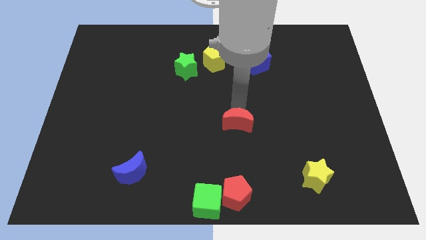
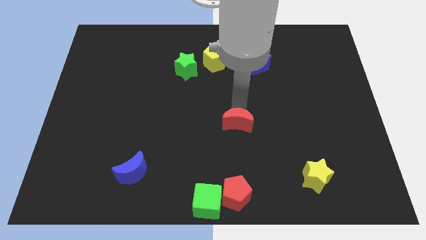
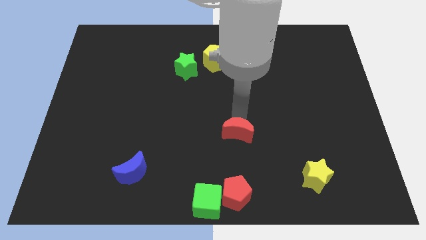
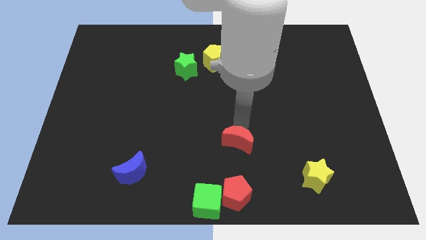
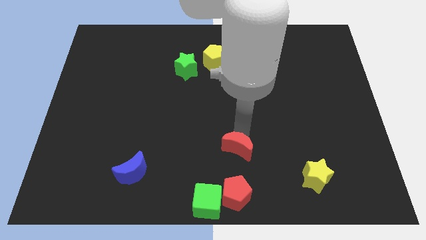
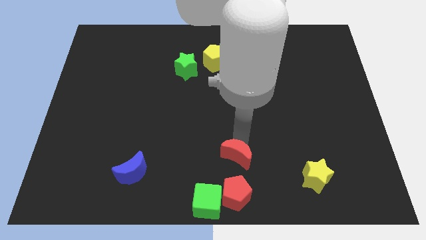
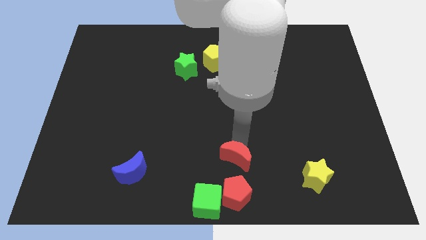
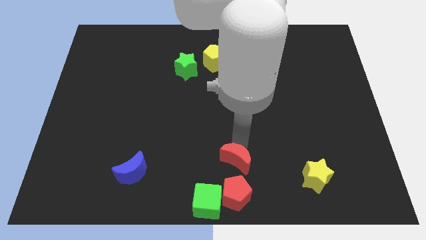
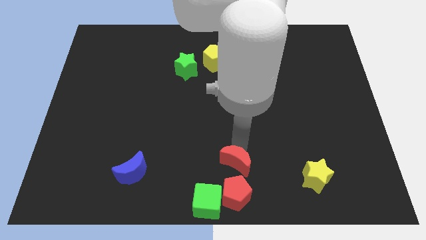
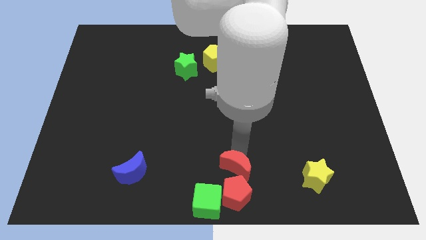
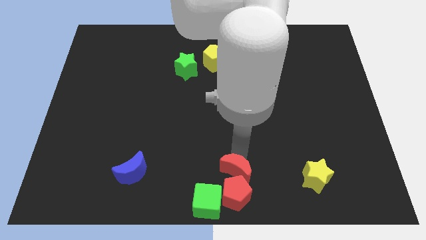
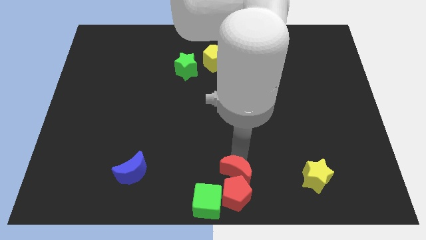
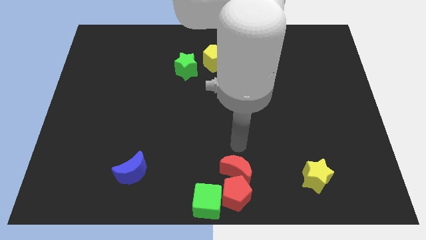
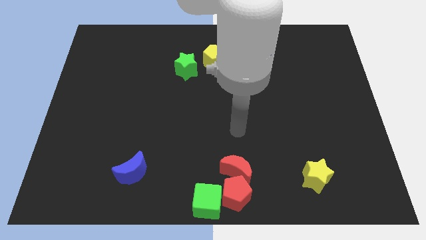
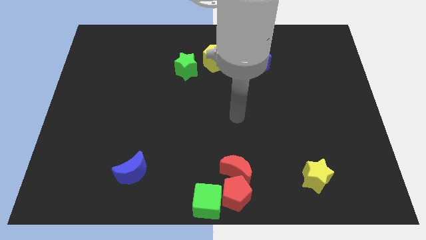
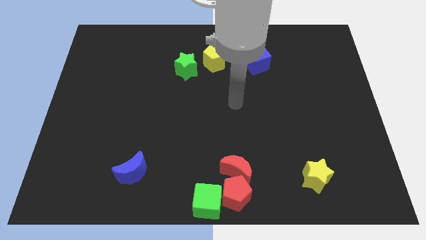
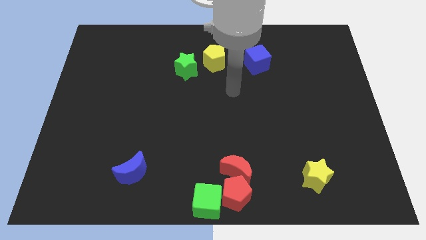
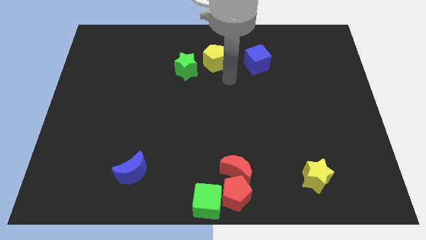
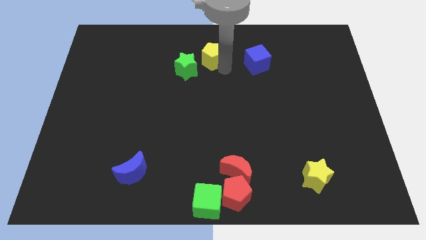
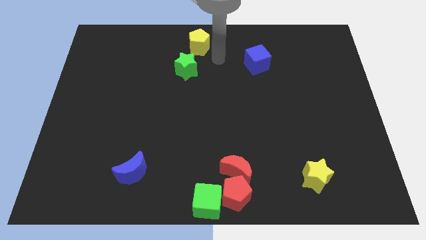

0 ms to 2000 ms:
move red moon into red pentagon

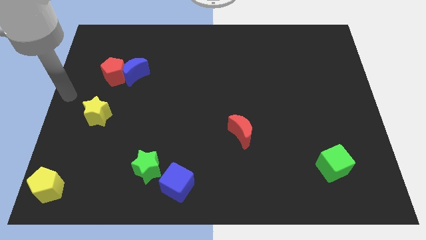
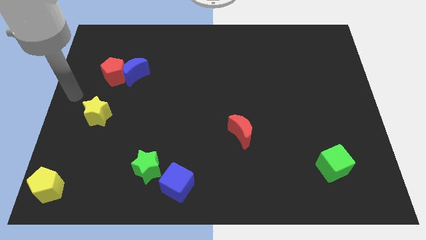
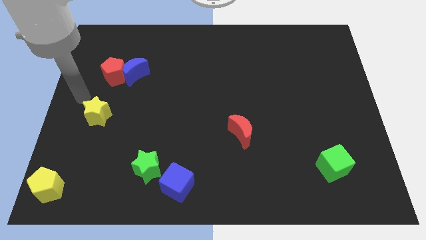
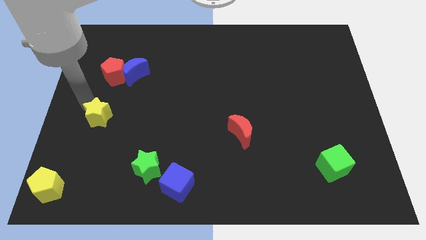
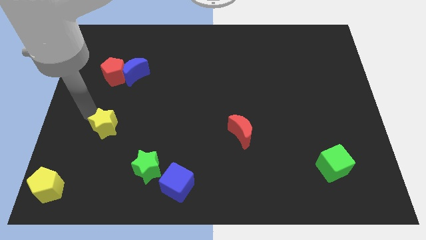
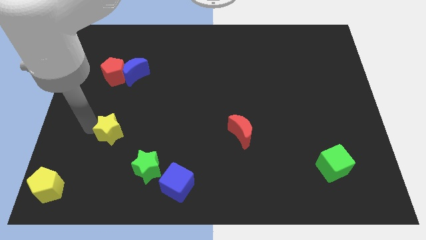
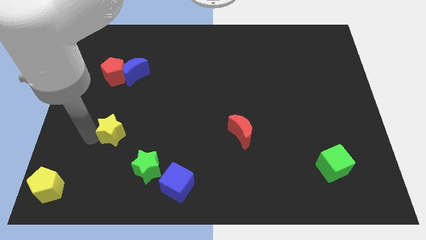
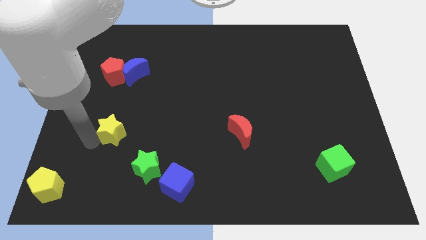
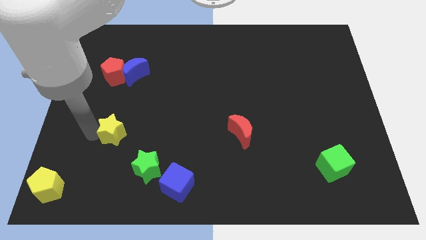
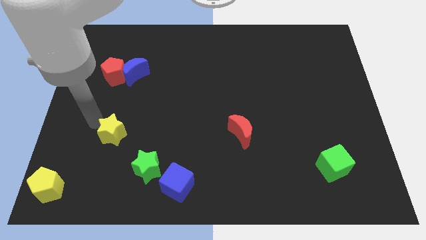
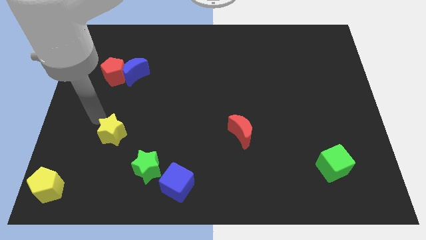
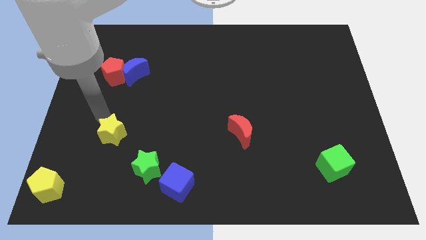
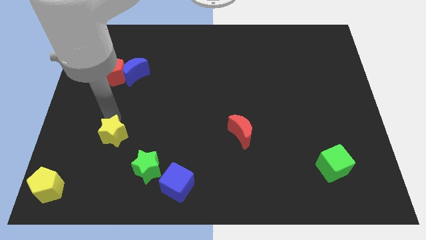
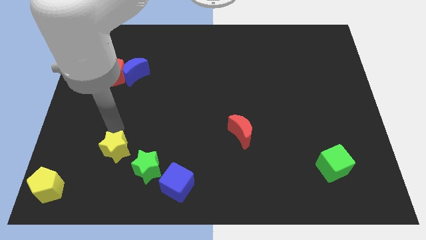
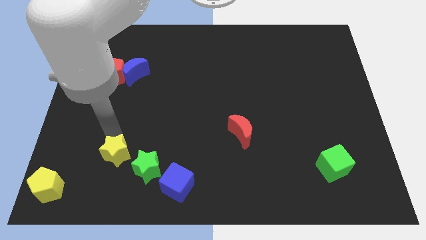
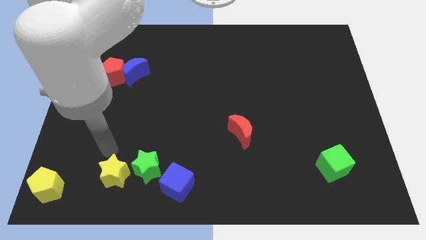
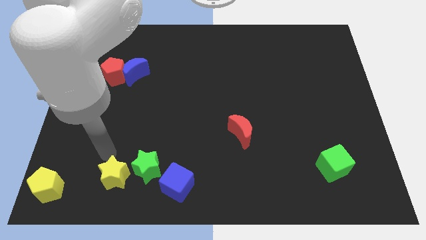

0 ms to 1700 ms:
place the yellow star left to the green star

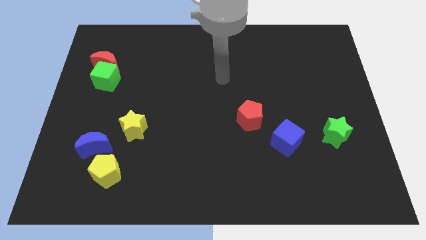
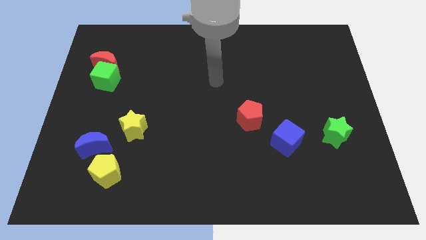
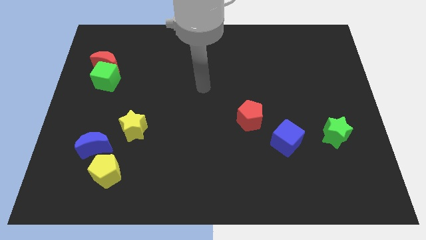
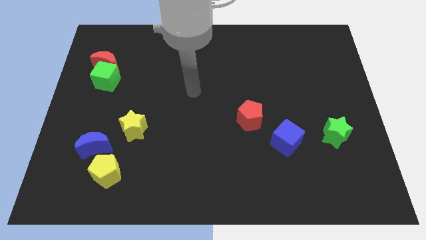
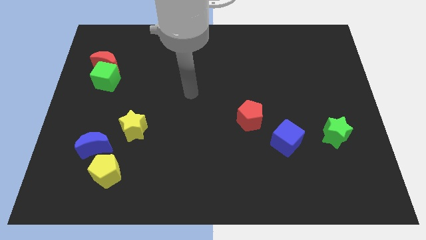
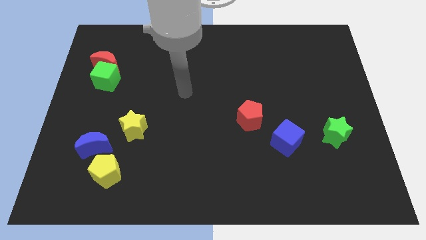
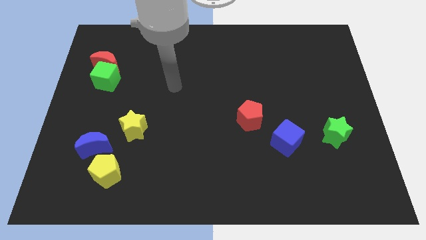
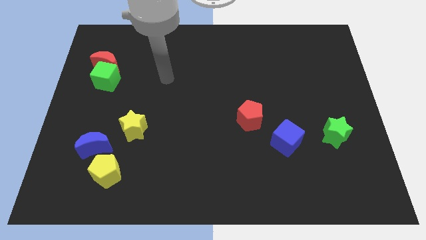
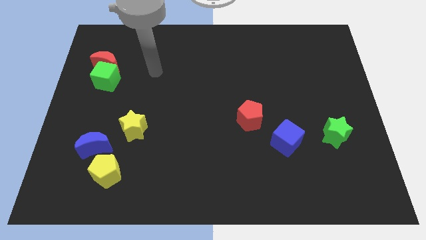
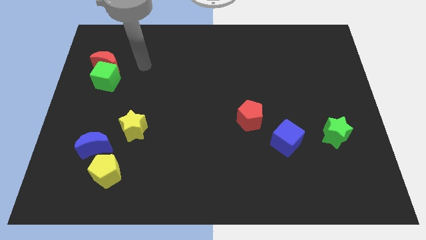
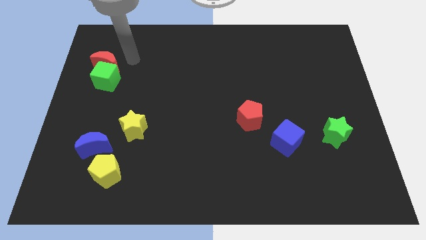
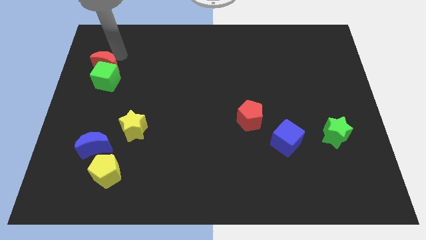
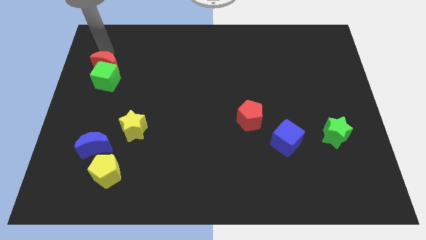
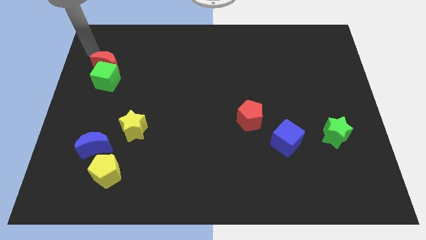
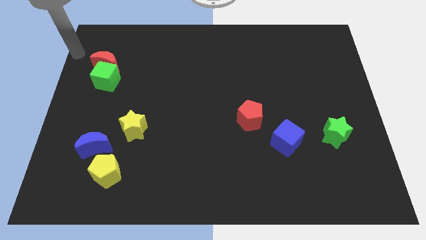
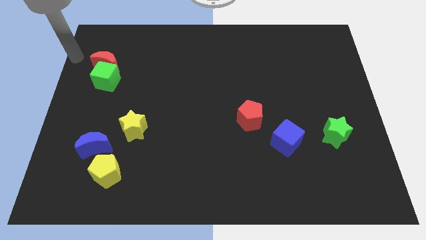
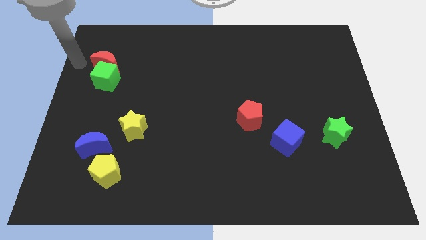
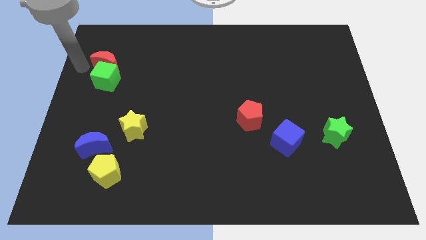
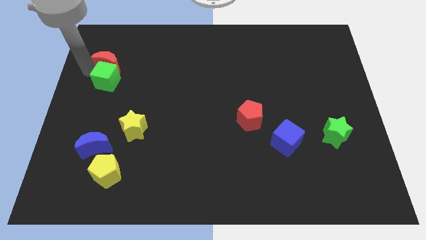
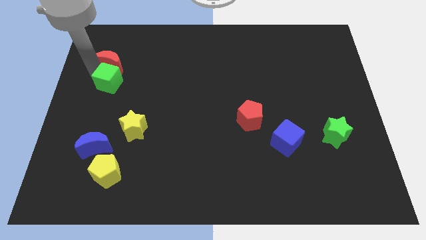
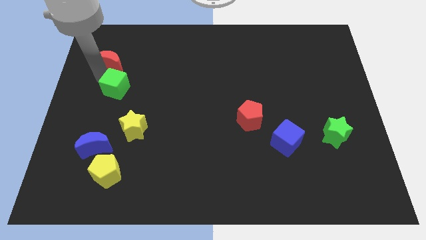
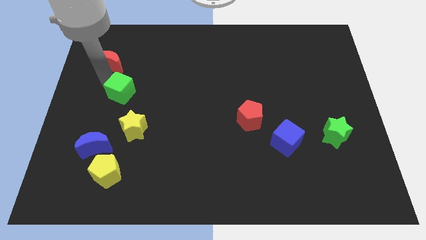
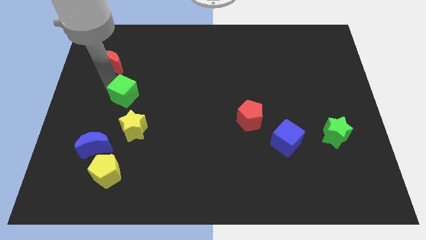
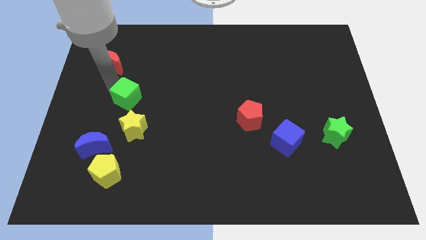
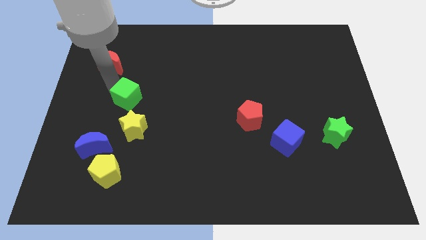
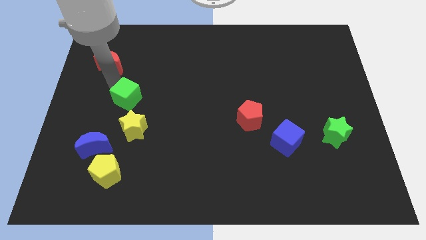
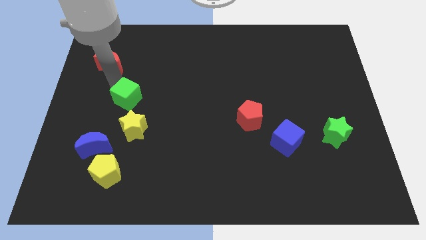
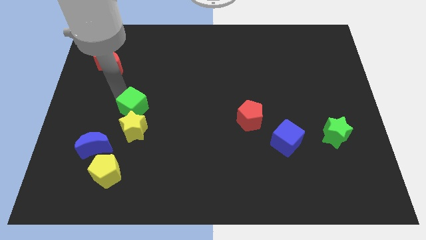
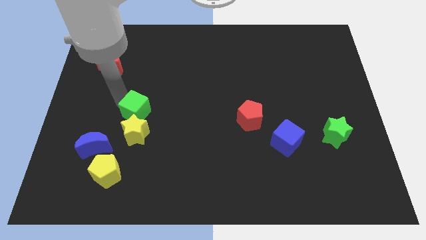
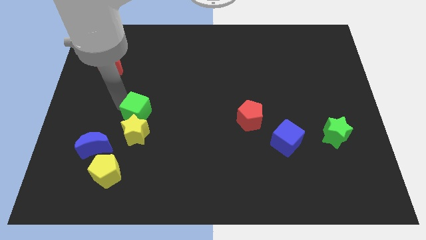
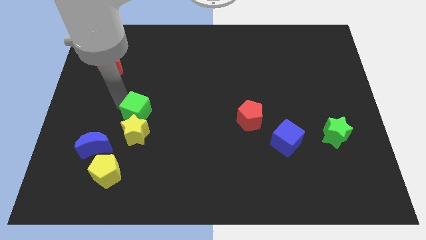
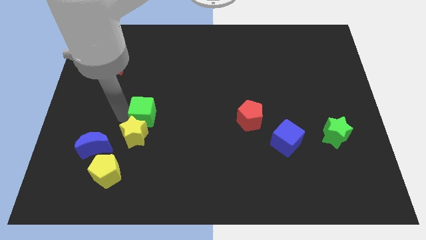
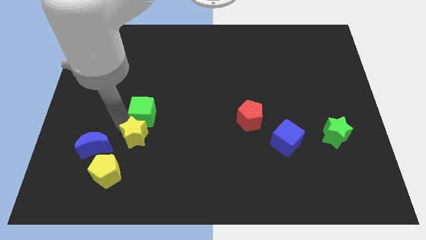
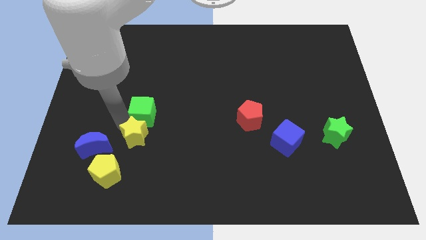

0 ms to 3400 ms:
push the green cube to the top of the yellow star

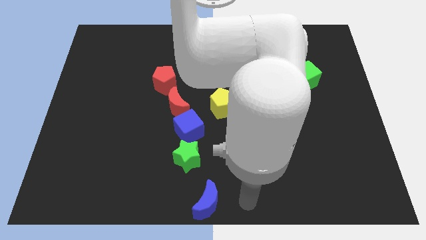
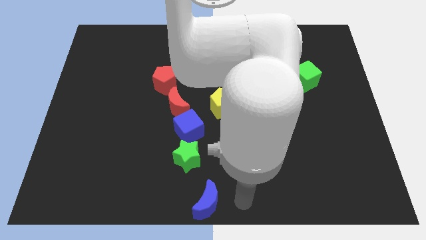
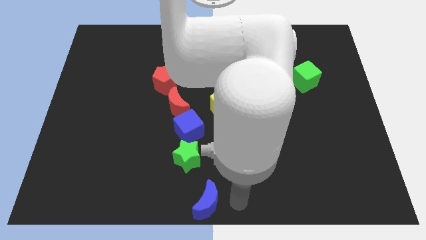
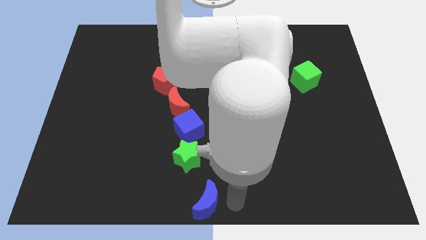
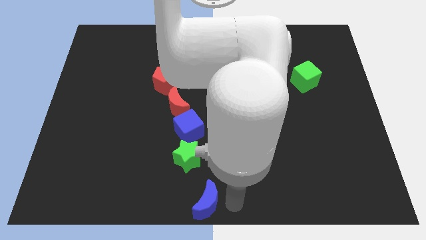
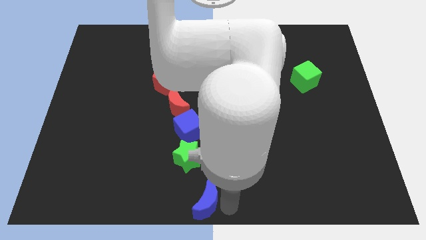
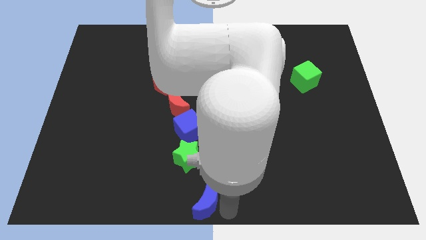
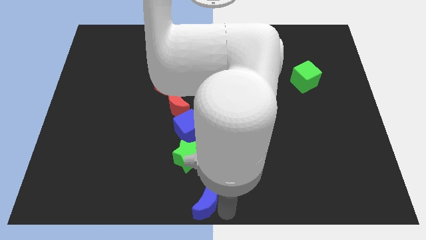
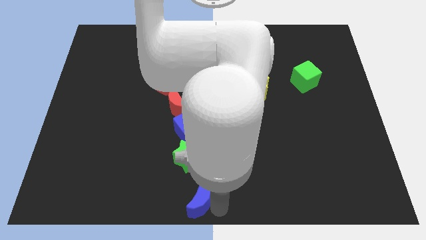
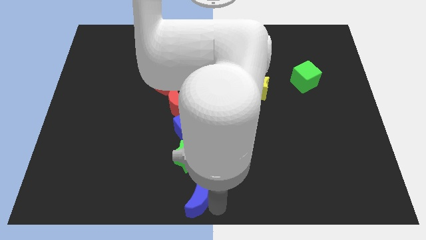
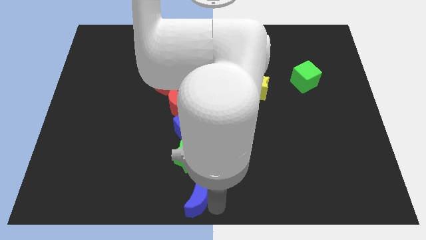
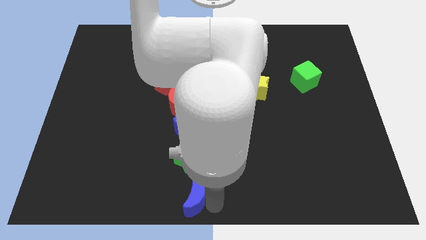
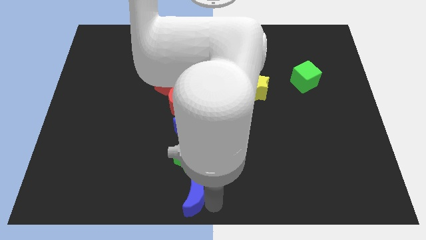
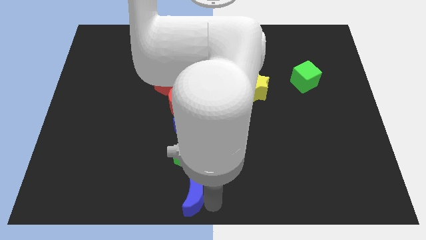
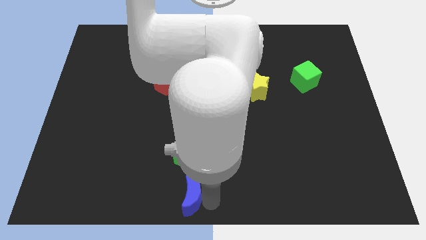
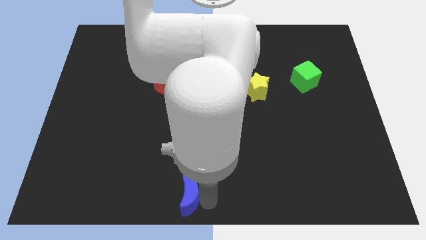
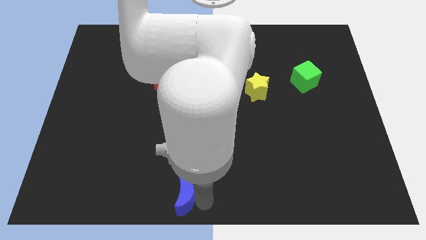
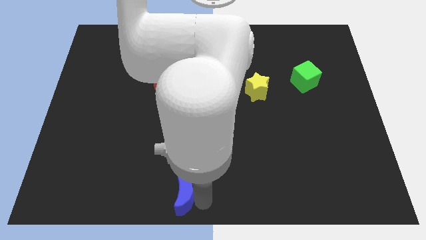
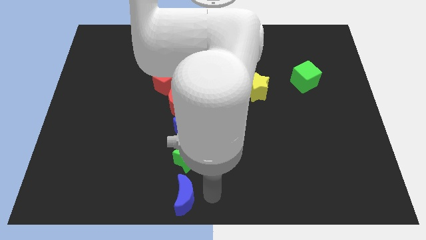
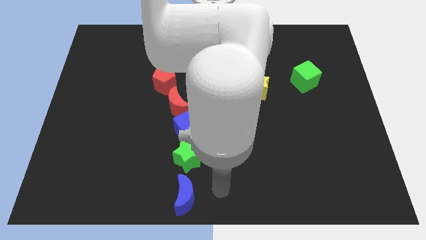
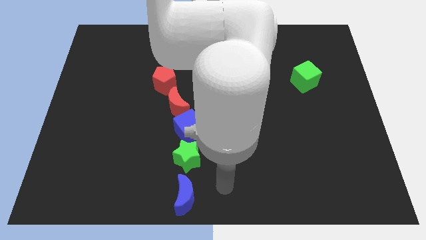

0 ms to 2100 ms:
move the blue moon slightly towards the left

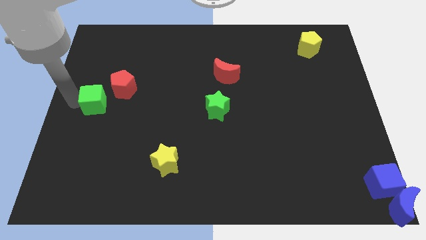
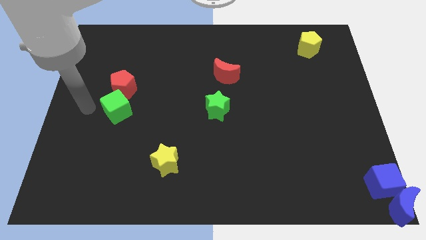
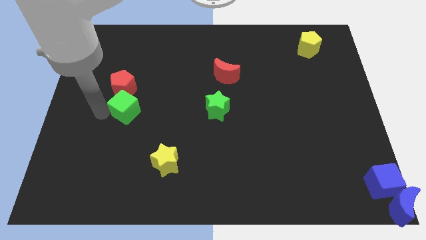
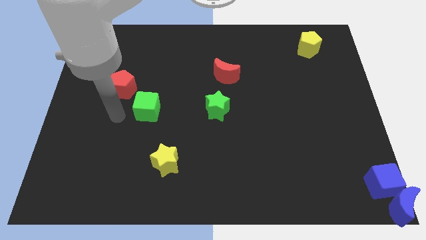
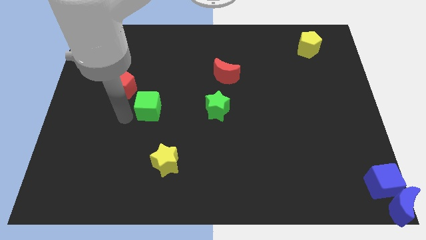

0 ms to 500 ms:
move the green cube to the right of the red pentagon
